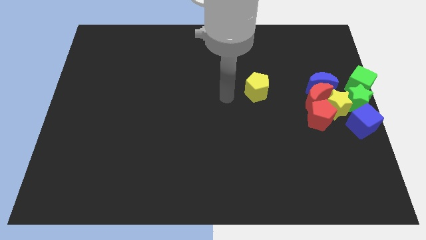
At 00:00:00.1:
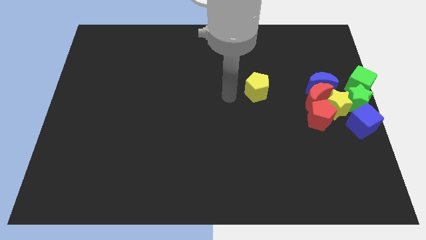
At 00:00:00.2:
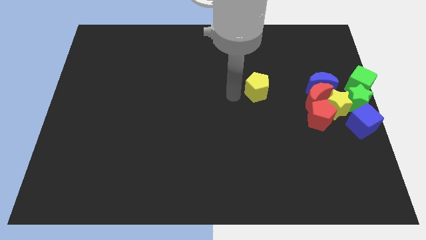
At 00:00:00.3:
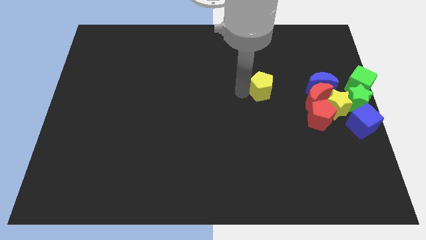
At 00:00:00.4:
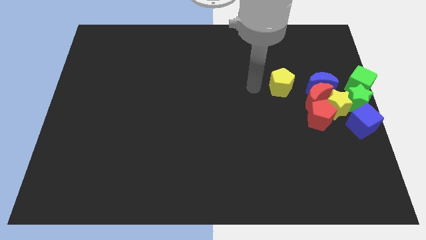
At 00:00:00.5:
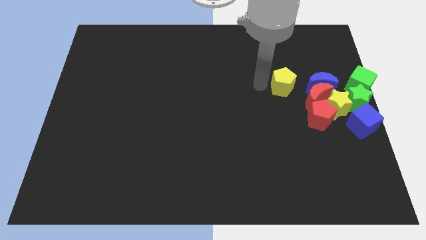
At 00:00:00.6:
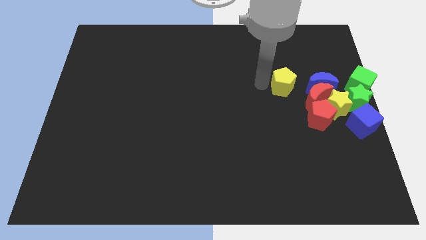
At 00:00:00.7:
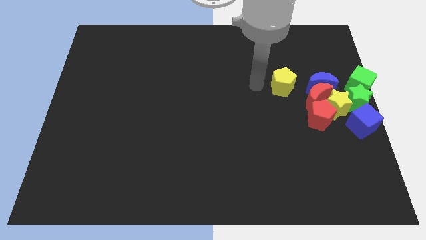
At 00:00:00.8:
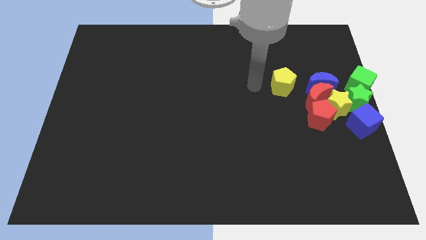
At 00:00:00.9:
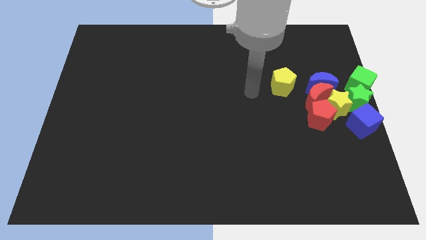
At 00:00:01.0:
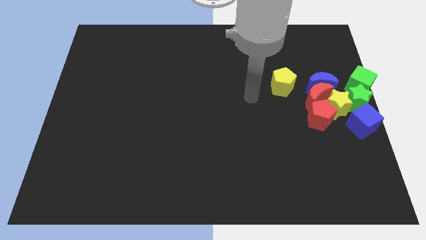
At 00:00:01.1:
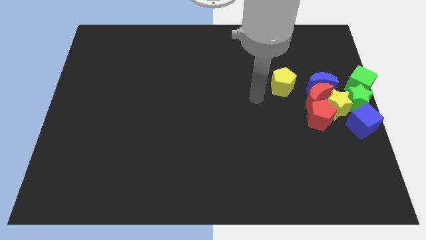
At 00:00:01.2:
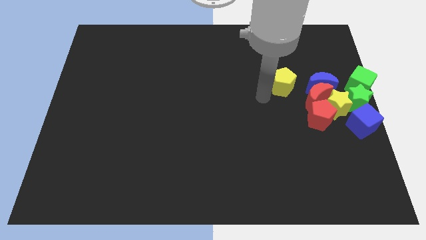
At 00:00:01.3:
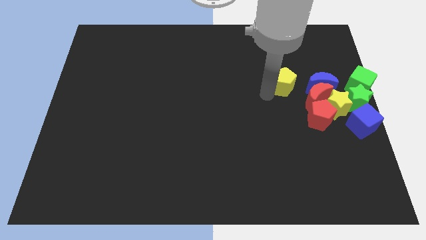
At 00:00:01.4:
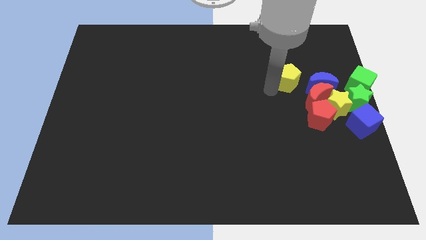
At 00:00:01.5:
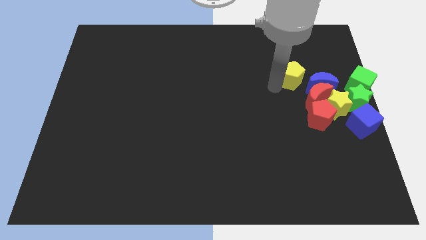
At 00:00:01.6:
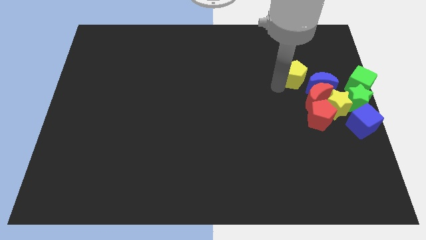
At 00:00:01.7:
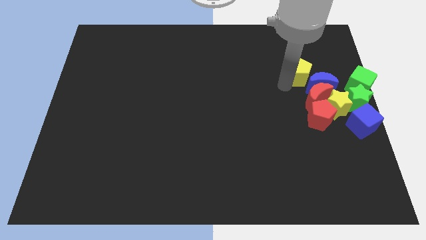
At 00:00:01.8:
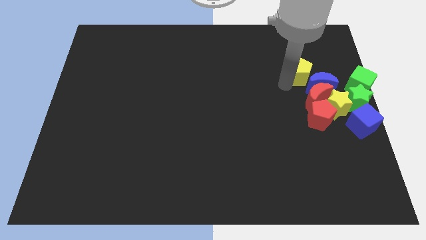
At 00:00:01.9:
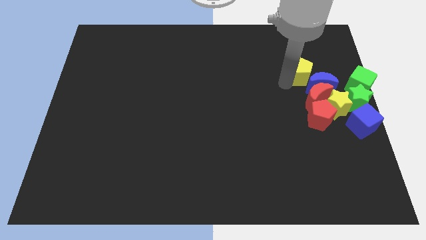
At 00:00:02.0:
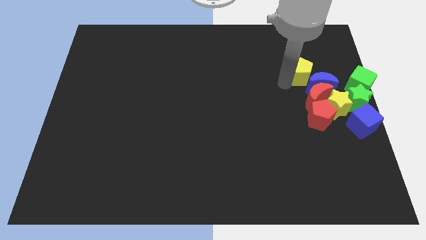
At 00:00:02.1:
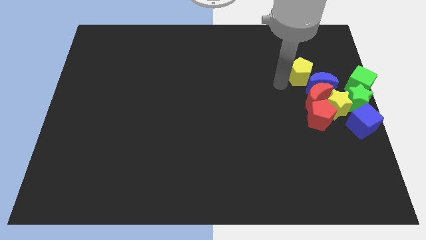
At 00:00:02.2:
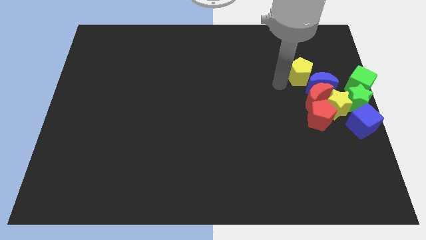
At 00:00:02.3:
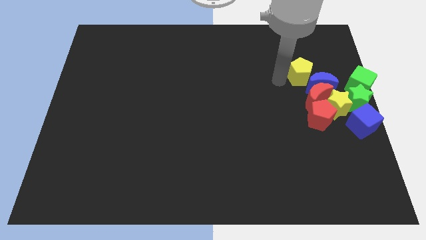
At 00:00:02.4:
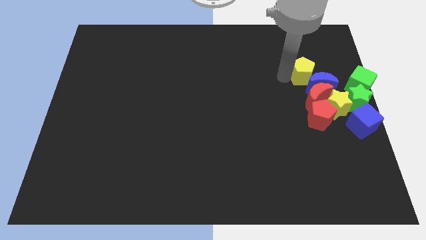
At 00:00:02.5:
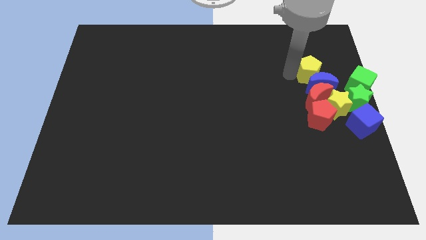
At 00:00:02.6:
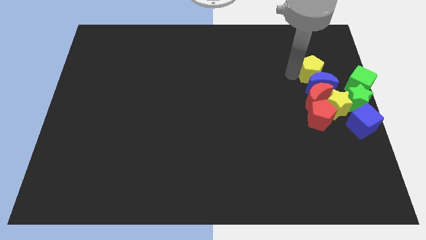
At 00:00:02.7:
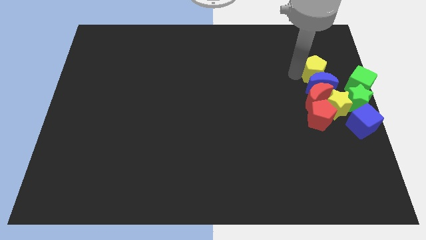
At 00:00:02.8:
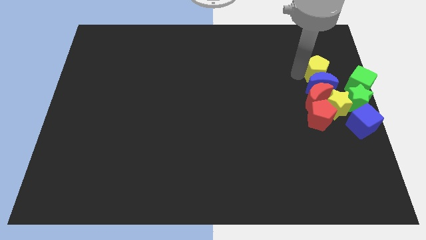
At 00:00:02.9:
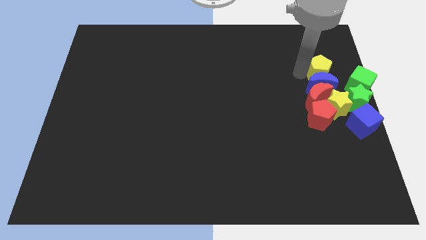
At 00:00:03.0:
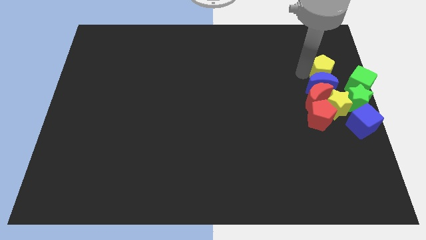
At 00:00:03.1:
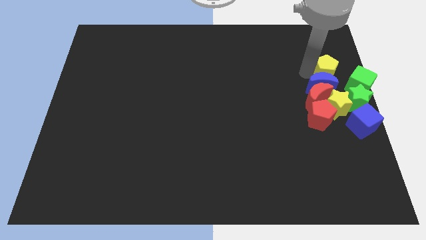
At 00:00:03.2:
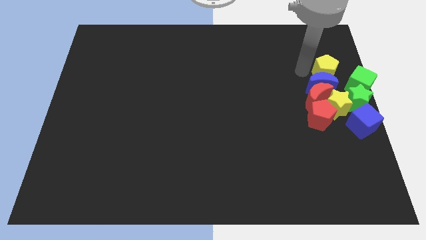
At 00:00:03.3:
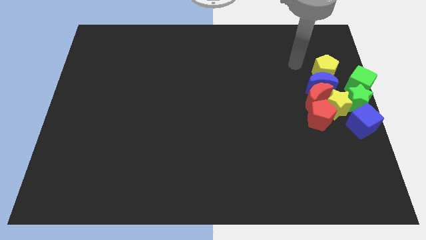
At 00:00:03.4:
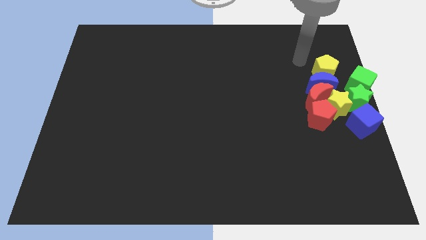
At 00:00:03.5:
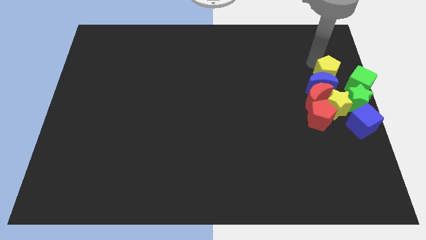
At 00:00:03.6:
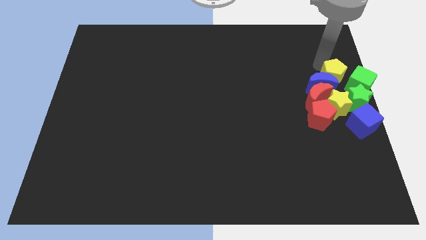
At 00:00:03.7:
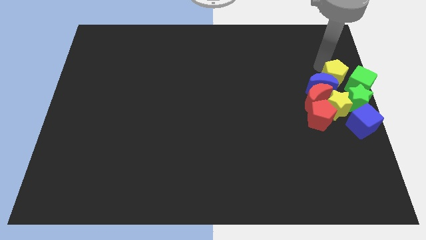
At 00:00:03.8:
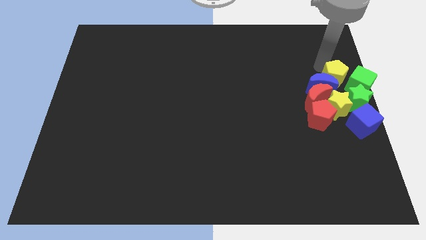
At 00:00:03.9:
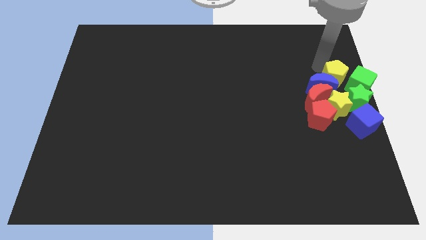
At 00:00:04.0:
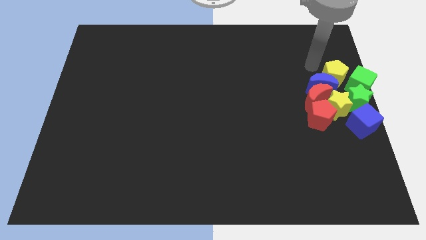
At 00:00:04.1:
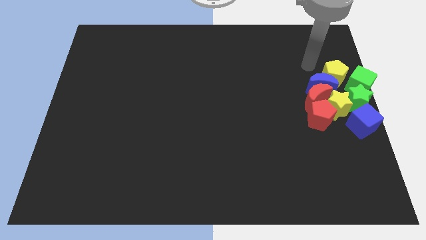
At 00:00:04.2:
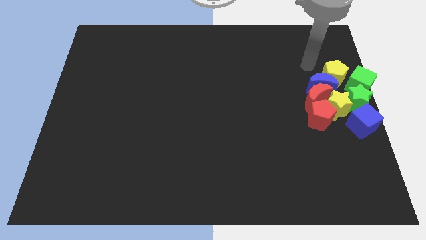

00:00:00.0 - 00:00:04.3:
place the yellow pentagon above the blue crescent

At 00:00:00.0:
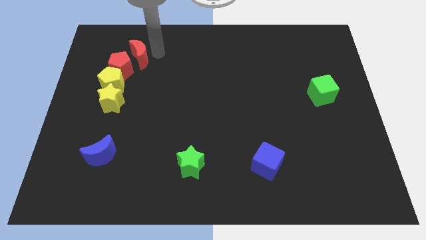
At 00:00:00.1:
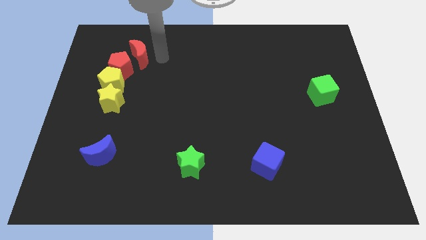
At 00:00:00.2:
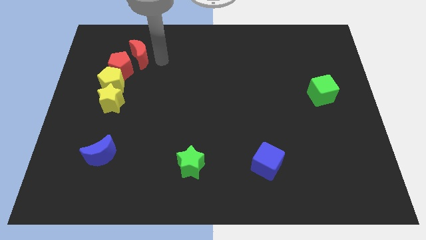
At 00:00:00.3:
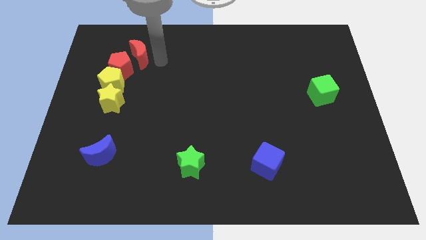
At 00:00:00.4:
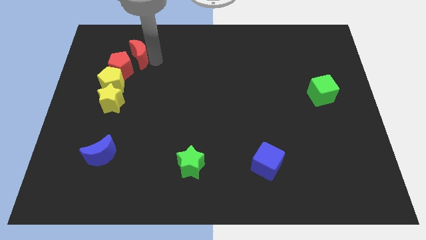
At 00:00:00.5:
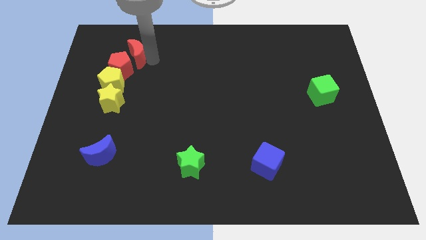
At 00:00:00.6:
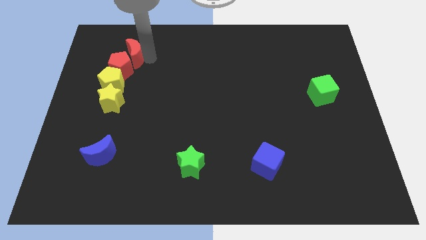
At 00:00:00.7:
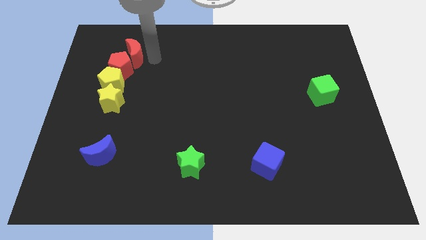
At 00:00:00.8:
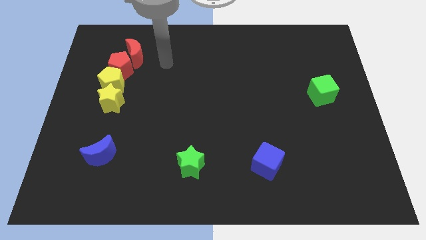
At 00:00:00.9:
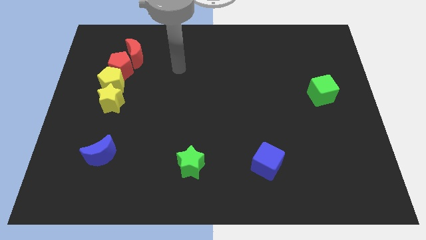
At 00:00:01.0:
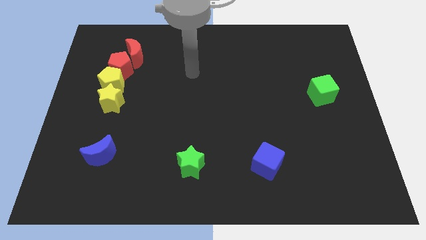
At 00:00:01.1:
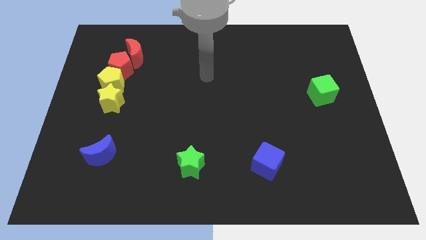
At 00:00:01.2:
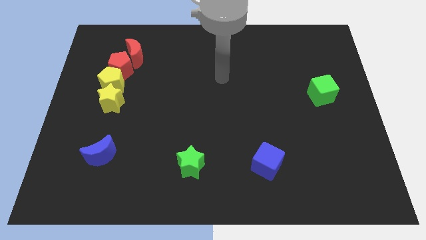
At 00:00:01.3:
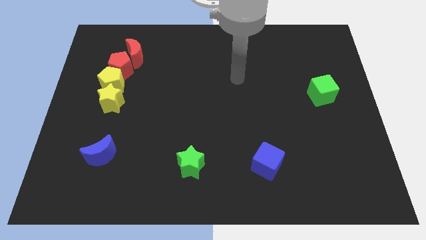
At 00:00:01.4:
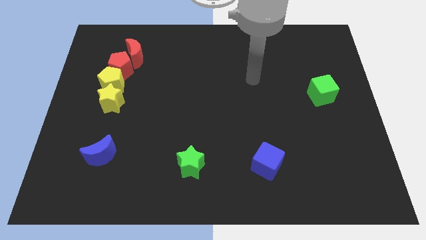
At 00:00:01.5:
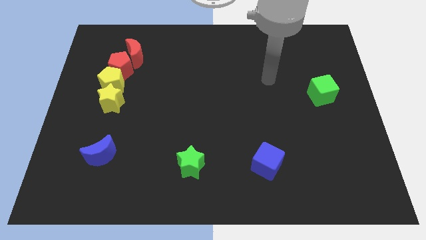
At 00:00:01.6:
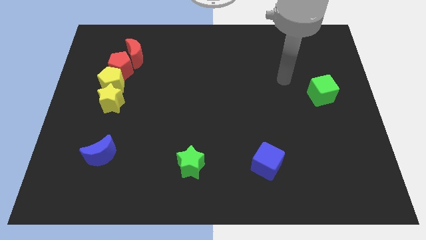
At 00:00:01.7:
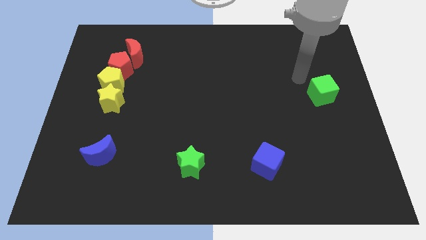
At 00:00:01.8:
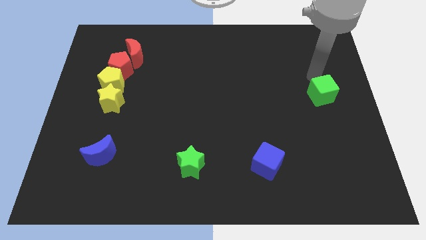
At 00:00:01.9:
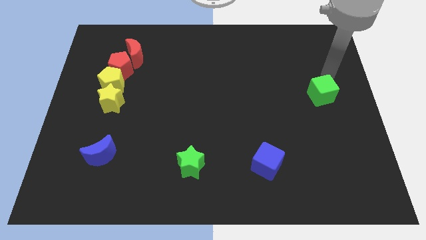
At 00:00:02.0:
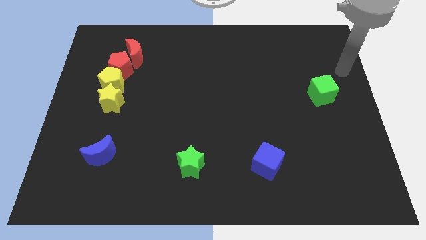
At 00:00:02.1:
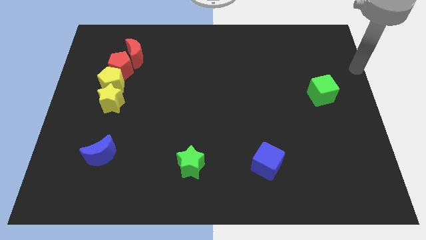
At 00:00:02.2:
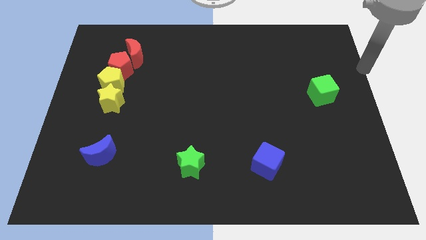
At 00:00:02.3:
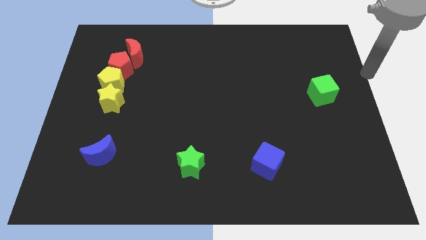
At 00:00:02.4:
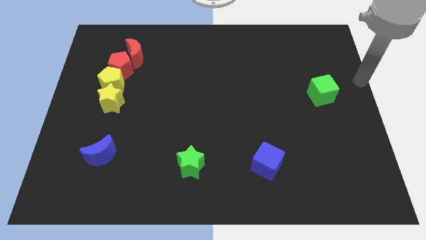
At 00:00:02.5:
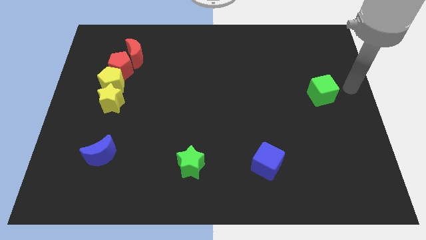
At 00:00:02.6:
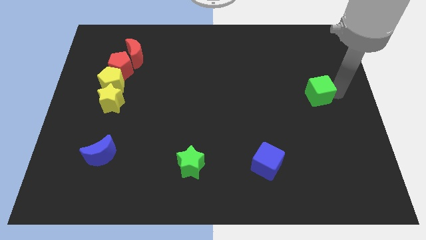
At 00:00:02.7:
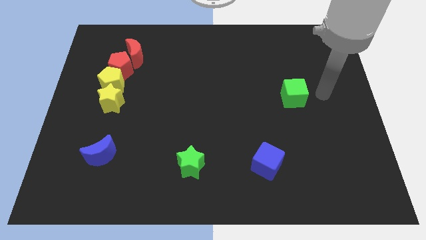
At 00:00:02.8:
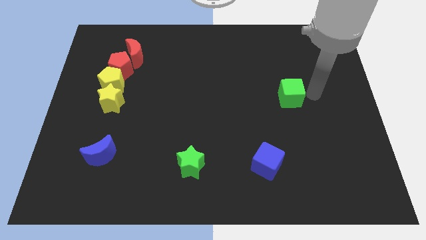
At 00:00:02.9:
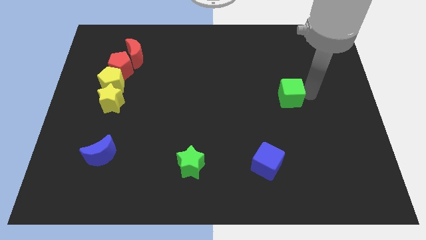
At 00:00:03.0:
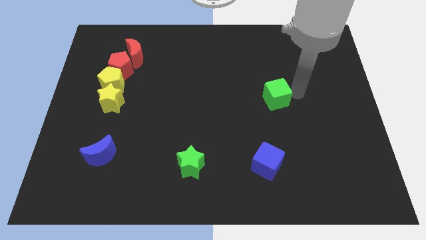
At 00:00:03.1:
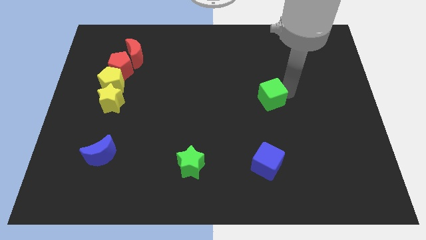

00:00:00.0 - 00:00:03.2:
place the green cube above the blue cube

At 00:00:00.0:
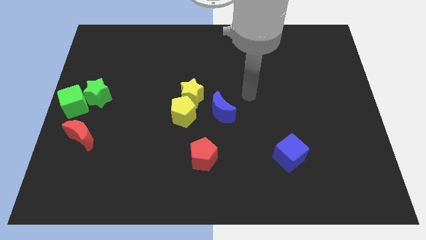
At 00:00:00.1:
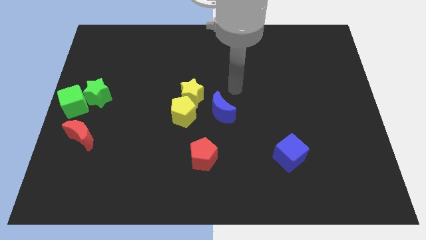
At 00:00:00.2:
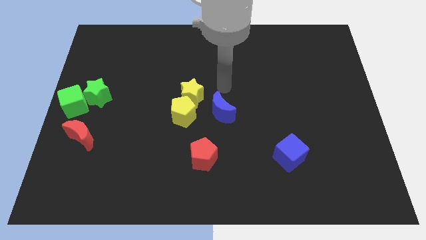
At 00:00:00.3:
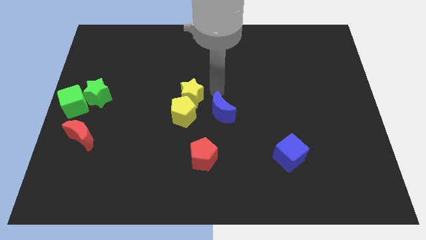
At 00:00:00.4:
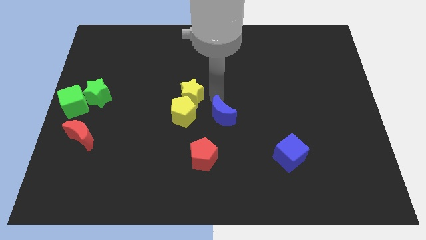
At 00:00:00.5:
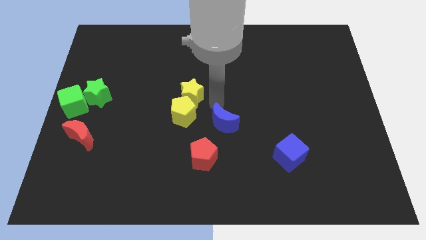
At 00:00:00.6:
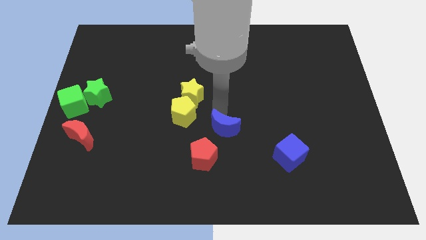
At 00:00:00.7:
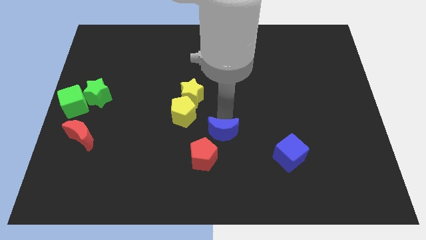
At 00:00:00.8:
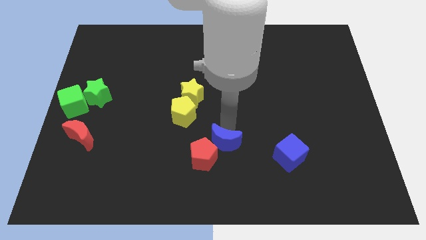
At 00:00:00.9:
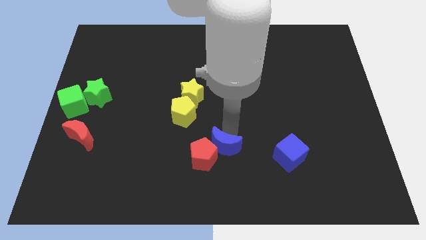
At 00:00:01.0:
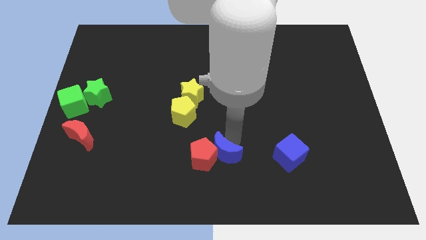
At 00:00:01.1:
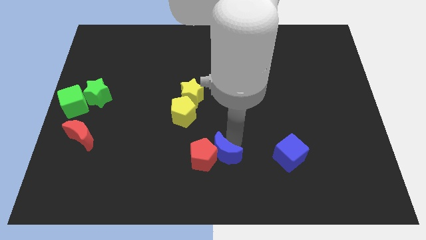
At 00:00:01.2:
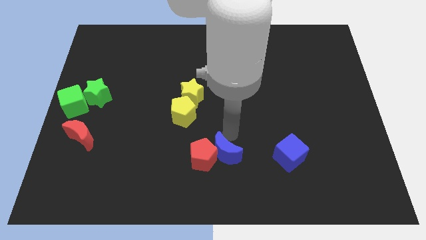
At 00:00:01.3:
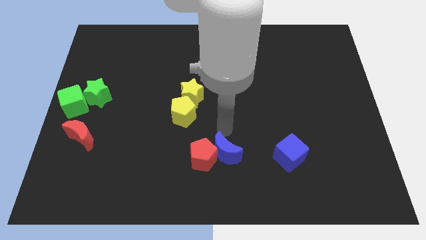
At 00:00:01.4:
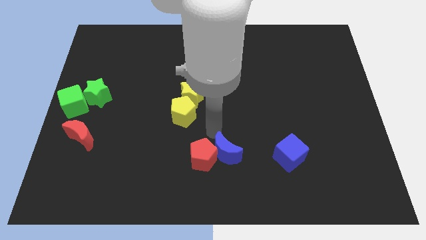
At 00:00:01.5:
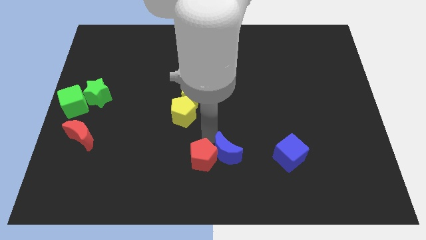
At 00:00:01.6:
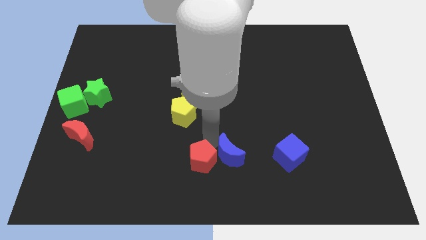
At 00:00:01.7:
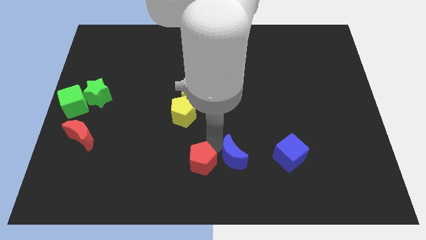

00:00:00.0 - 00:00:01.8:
push the blue crescent to the right of the red pentagon
